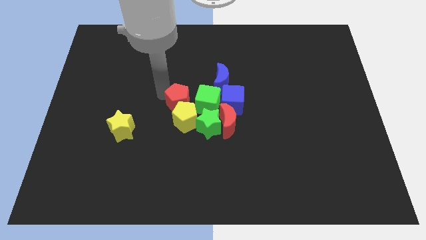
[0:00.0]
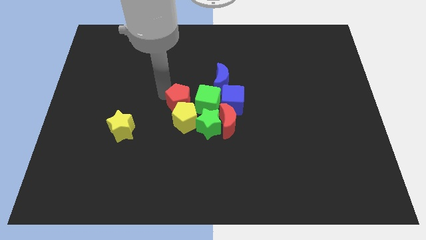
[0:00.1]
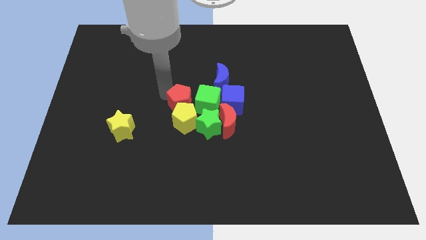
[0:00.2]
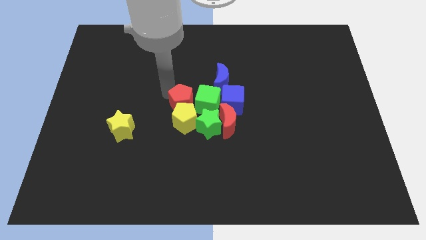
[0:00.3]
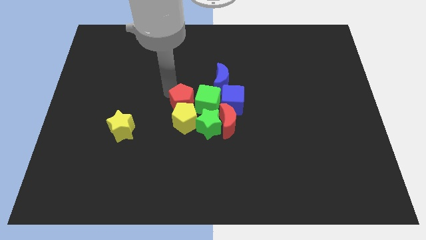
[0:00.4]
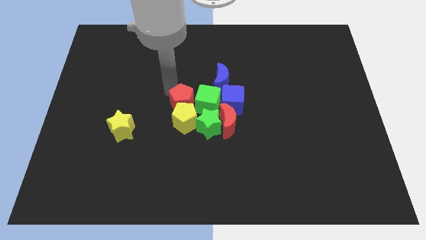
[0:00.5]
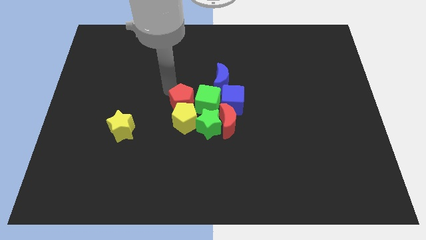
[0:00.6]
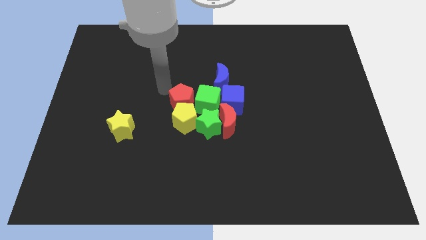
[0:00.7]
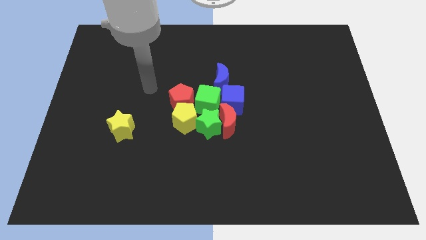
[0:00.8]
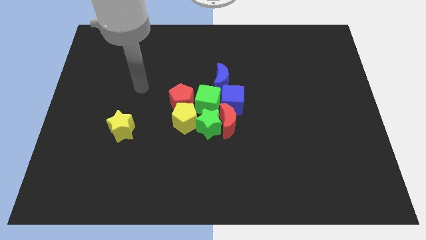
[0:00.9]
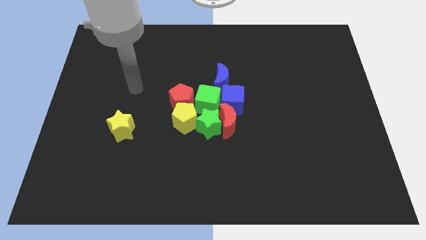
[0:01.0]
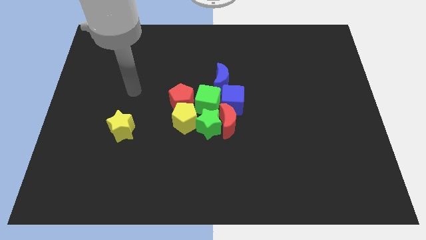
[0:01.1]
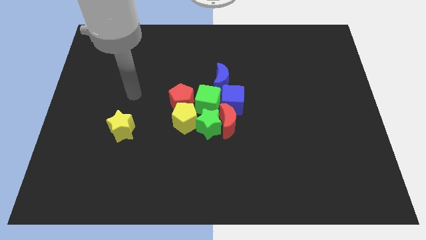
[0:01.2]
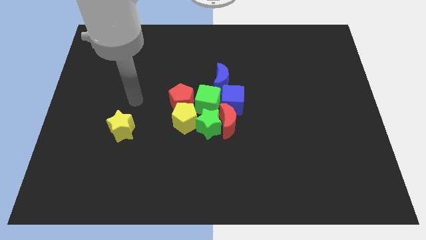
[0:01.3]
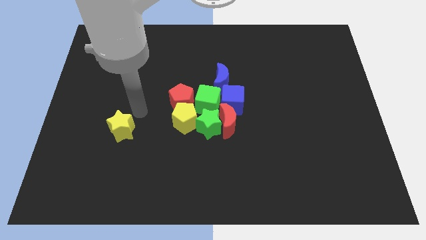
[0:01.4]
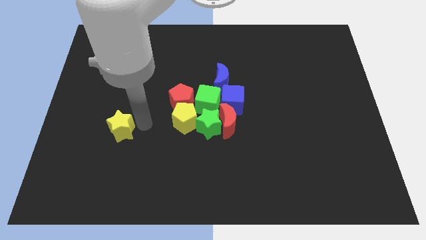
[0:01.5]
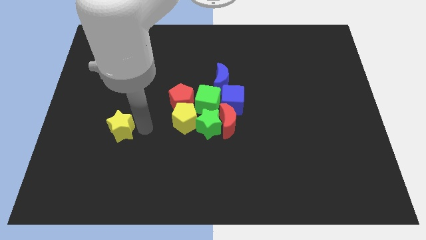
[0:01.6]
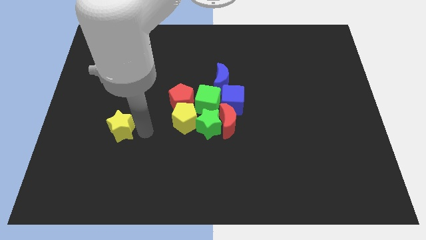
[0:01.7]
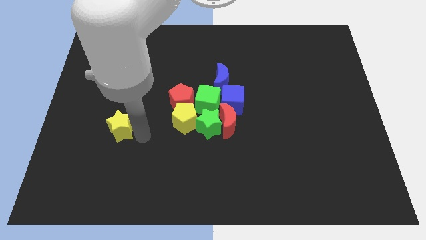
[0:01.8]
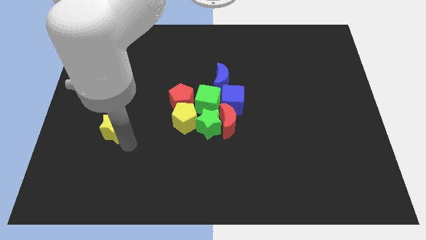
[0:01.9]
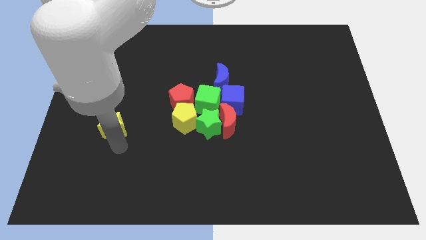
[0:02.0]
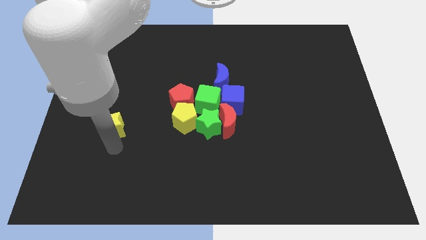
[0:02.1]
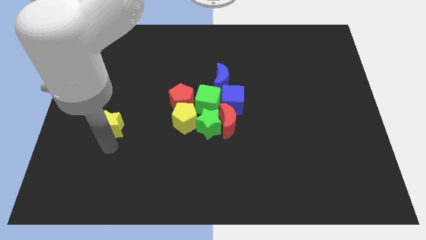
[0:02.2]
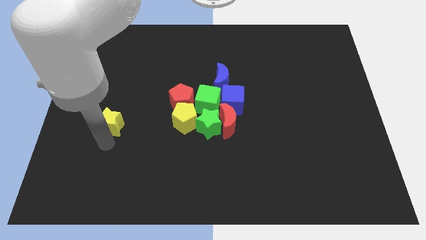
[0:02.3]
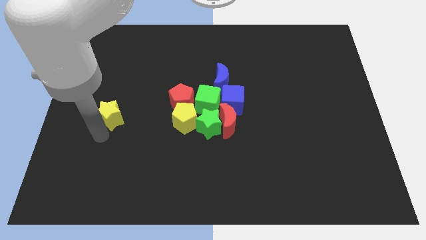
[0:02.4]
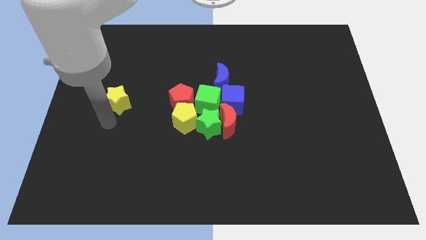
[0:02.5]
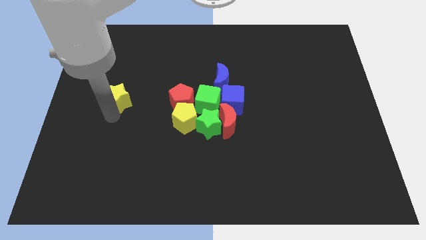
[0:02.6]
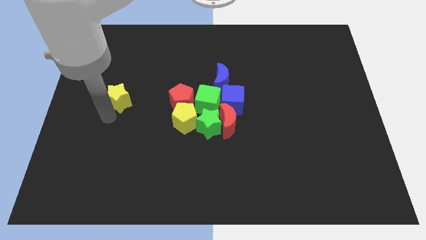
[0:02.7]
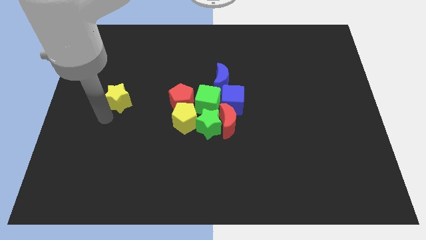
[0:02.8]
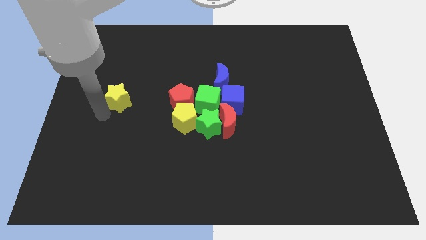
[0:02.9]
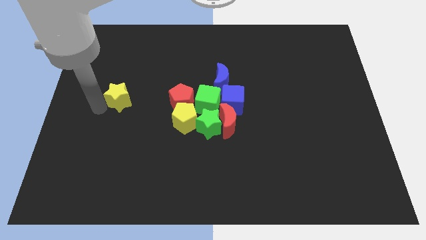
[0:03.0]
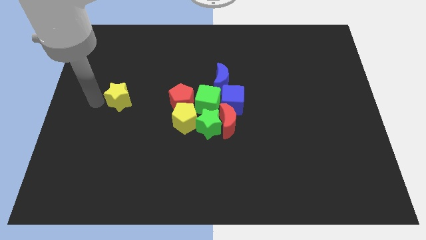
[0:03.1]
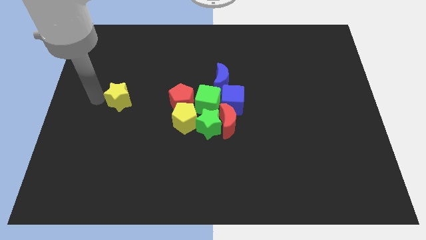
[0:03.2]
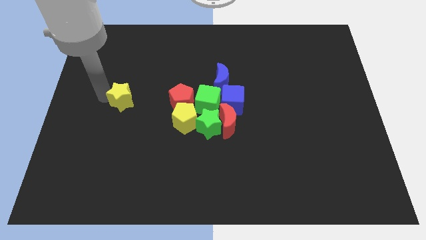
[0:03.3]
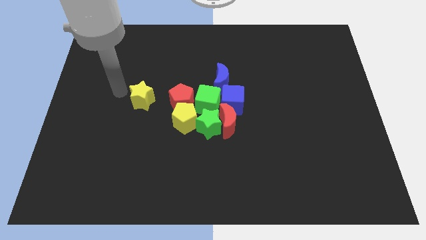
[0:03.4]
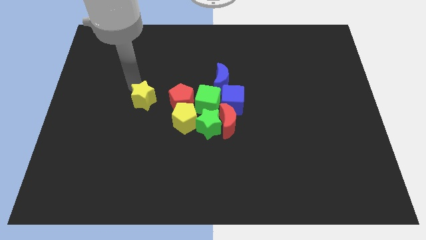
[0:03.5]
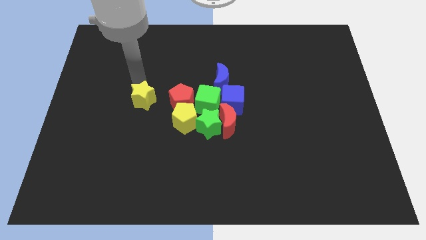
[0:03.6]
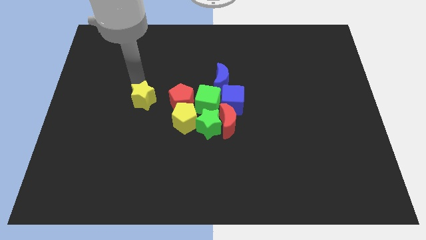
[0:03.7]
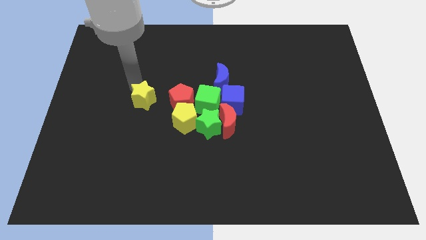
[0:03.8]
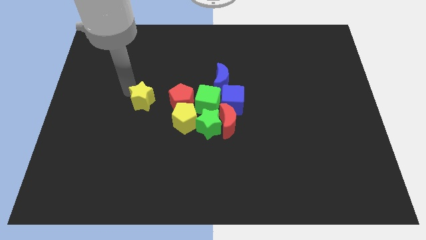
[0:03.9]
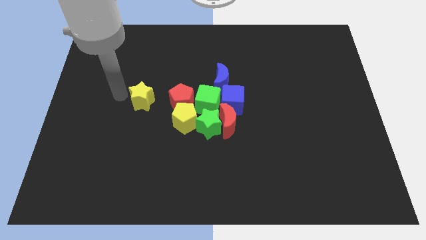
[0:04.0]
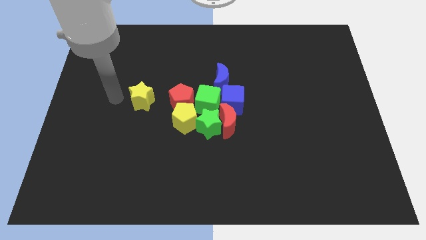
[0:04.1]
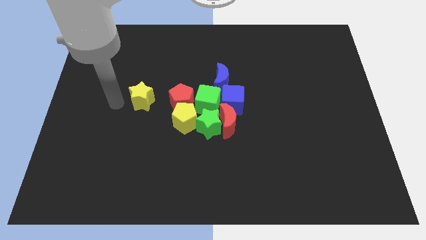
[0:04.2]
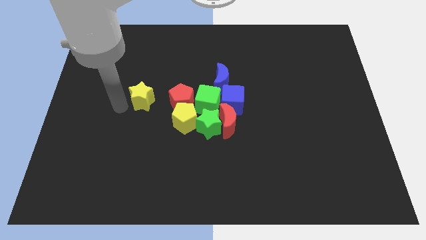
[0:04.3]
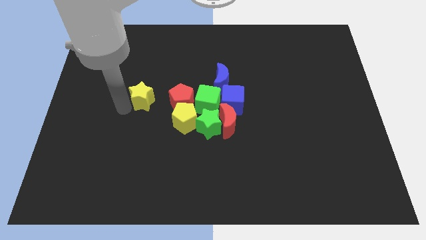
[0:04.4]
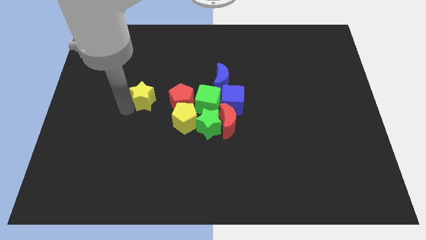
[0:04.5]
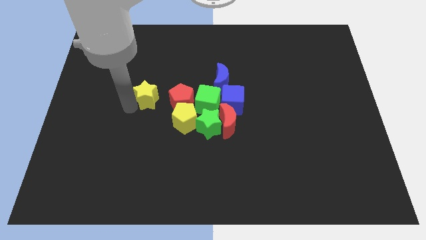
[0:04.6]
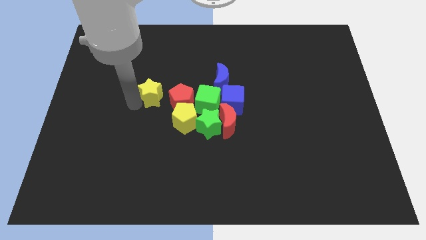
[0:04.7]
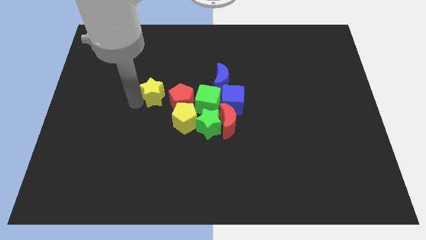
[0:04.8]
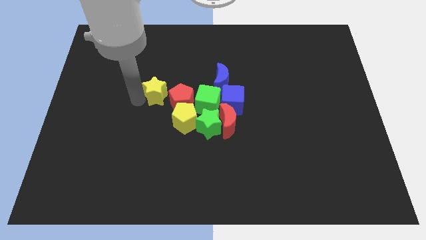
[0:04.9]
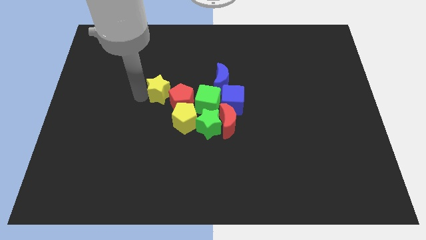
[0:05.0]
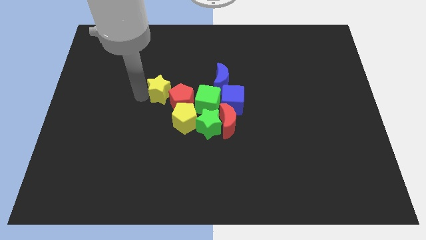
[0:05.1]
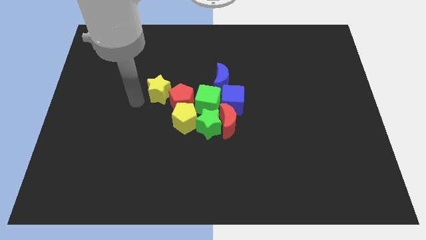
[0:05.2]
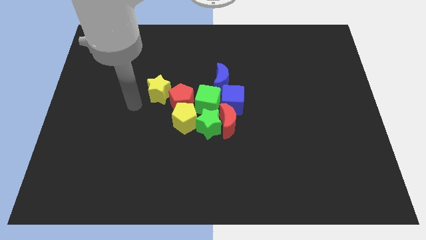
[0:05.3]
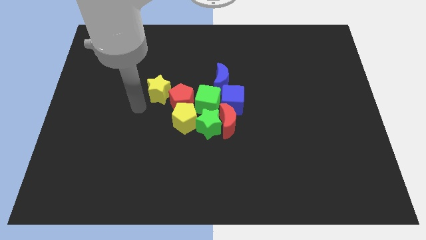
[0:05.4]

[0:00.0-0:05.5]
place the yellow star to top left side of red pentagon

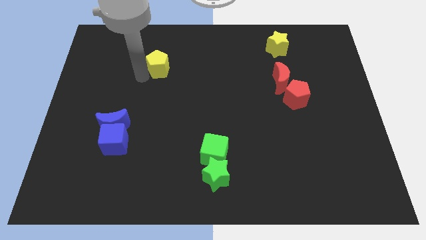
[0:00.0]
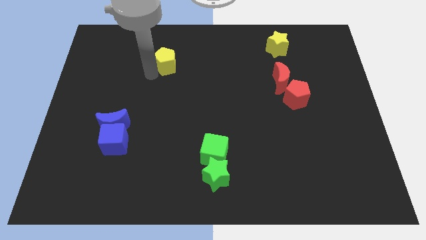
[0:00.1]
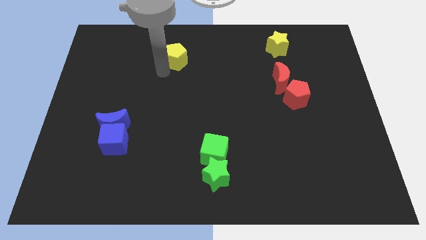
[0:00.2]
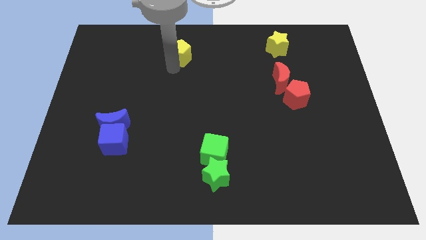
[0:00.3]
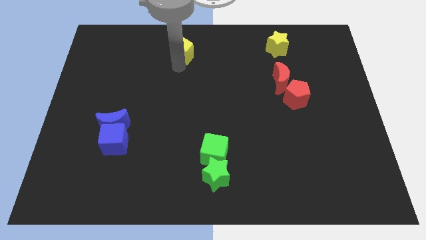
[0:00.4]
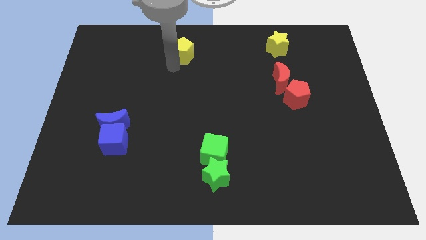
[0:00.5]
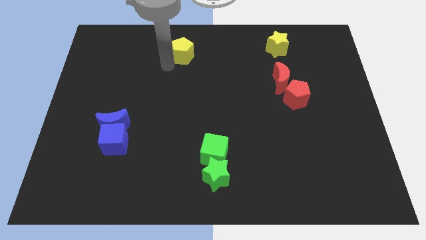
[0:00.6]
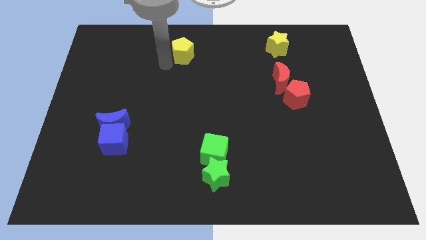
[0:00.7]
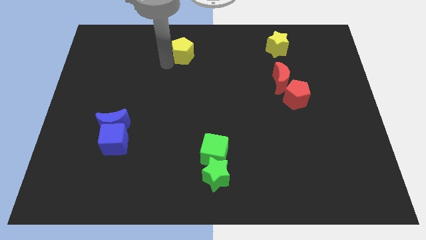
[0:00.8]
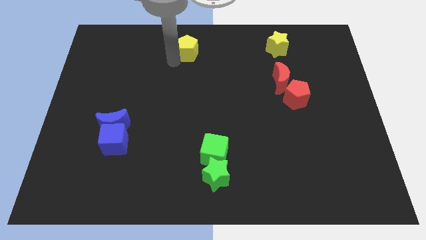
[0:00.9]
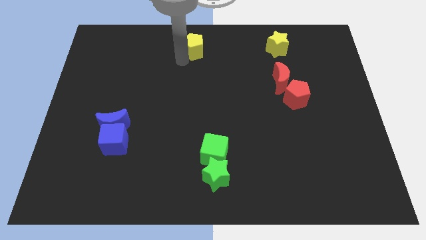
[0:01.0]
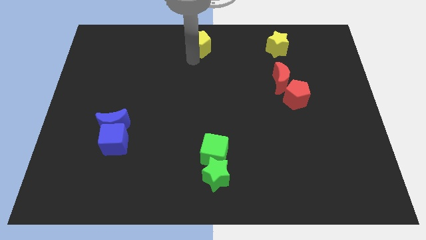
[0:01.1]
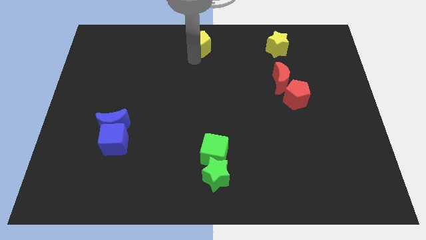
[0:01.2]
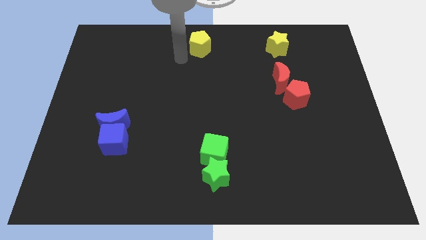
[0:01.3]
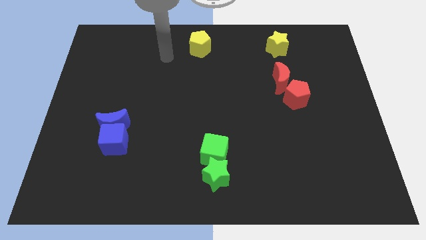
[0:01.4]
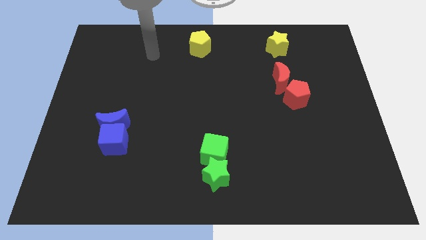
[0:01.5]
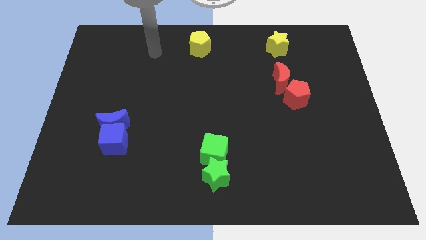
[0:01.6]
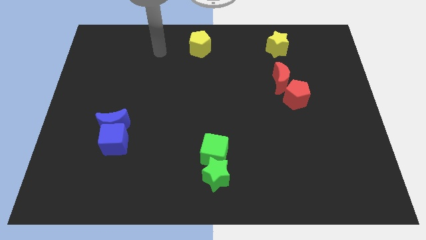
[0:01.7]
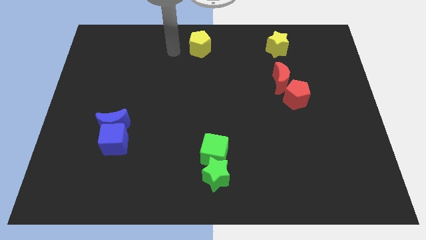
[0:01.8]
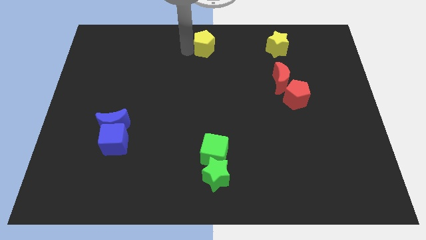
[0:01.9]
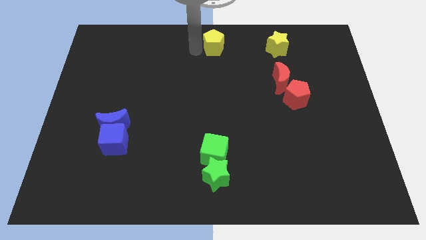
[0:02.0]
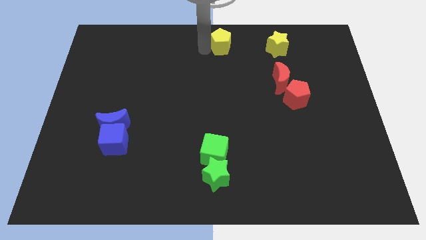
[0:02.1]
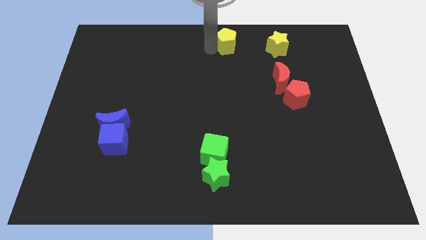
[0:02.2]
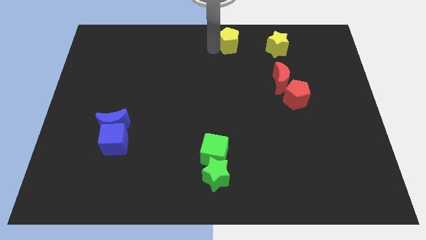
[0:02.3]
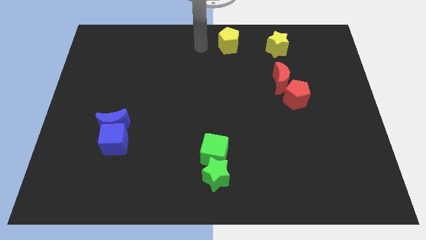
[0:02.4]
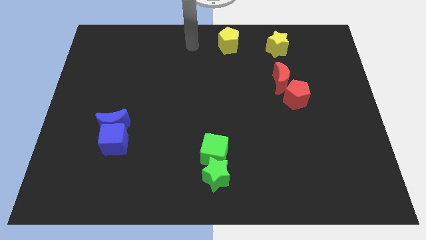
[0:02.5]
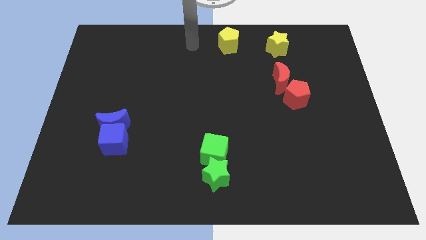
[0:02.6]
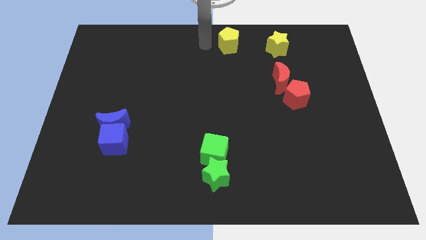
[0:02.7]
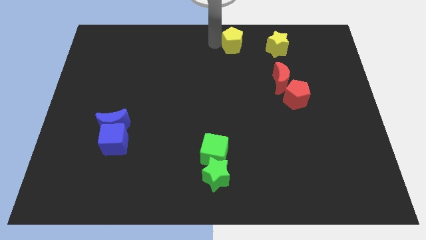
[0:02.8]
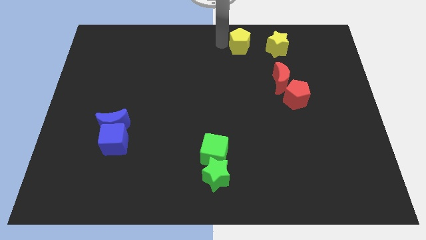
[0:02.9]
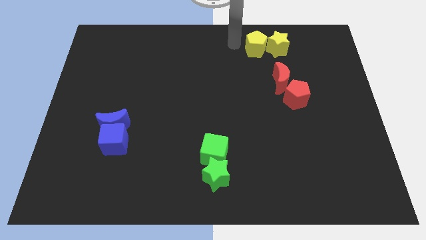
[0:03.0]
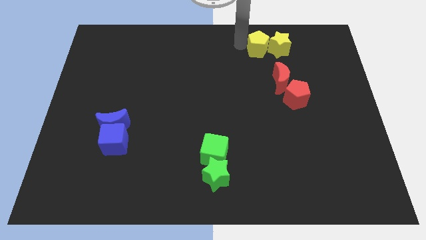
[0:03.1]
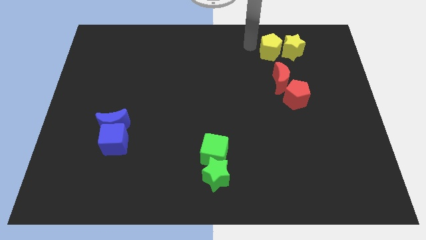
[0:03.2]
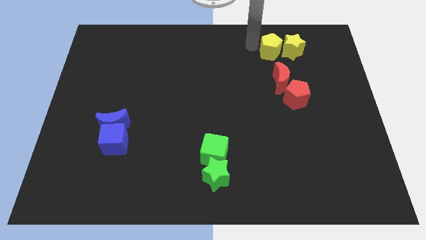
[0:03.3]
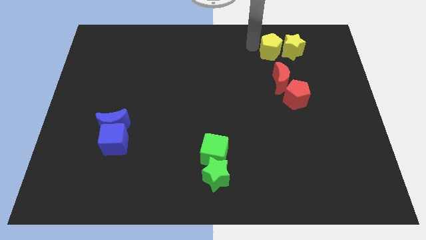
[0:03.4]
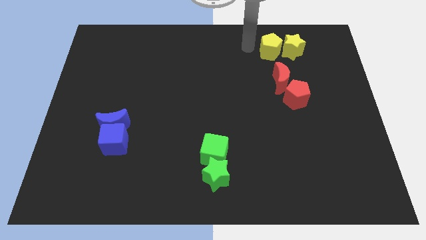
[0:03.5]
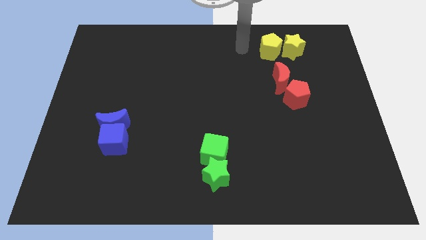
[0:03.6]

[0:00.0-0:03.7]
push the yellow pentagon into the yellow star
